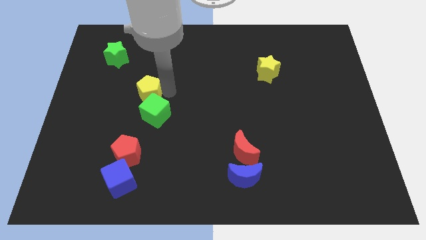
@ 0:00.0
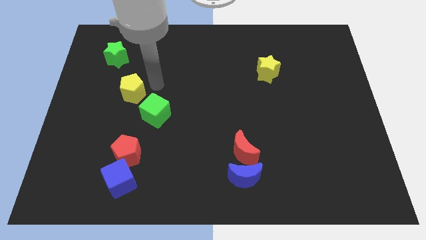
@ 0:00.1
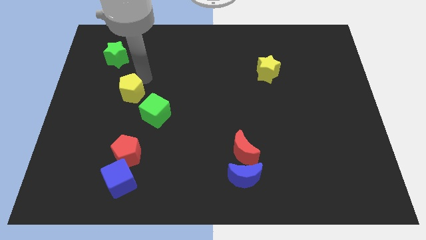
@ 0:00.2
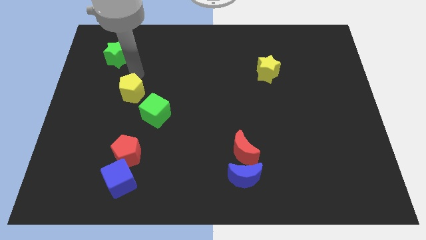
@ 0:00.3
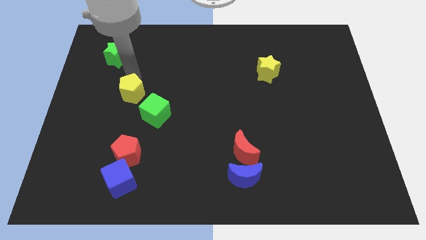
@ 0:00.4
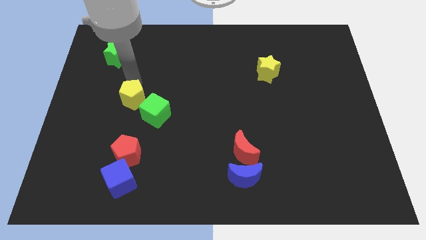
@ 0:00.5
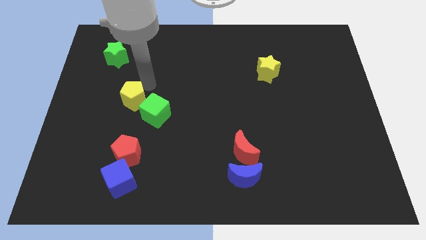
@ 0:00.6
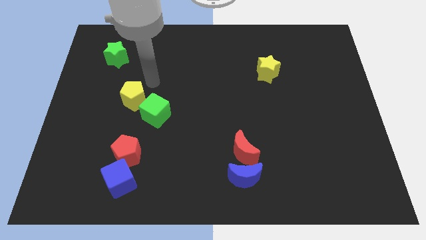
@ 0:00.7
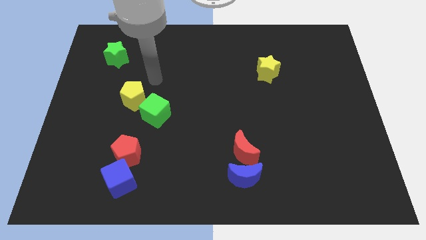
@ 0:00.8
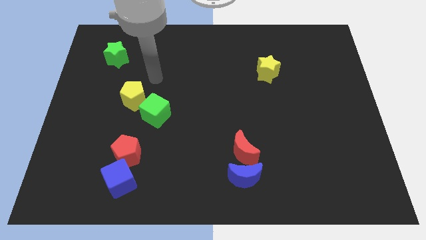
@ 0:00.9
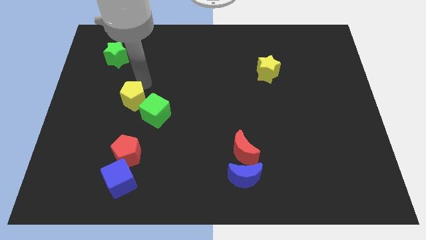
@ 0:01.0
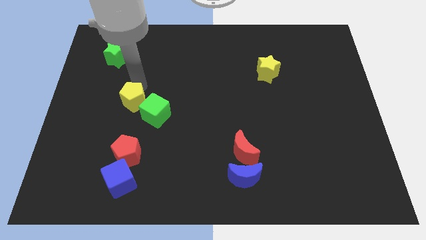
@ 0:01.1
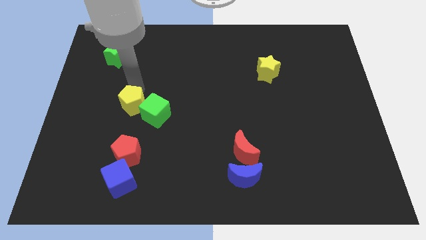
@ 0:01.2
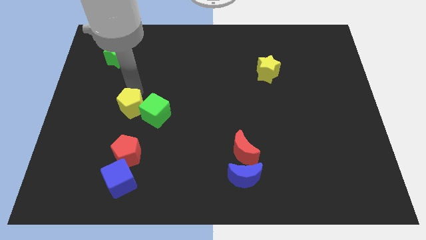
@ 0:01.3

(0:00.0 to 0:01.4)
move yellow pentagon beside green cube

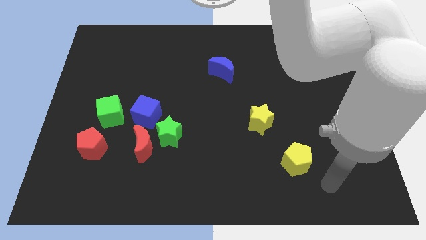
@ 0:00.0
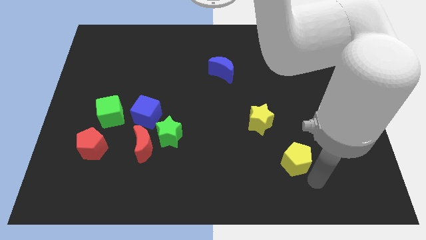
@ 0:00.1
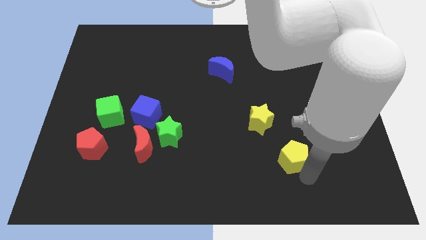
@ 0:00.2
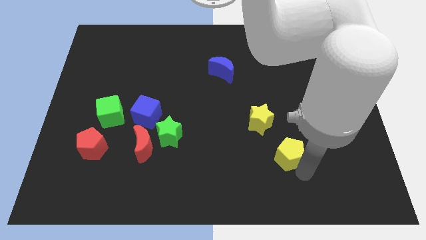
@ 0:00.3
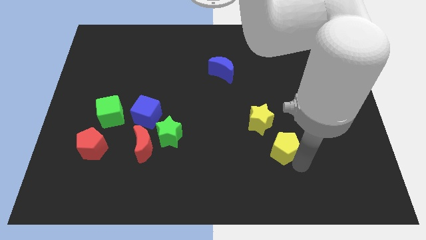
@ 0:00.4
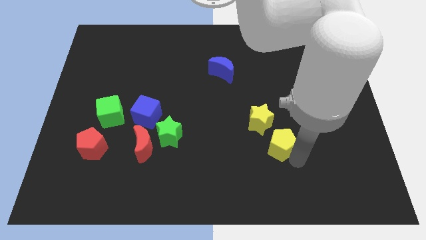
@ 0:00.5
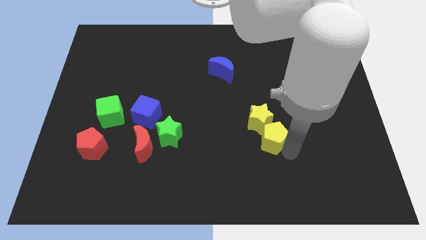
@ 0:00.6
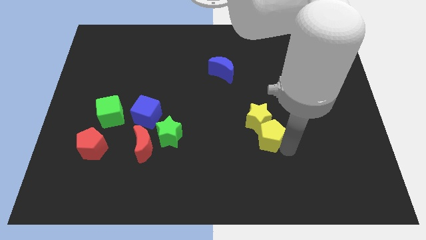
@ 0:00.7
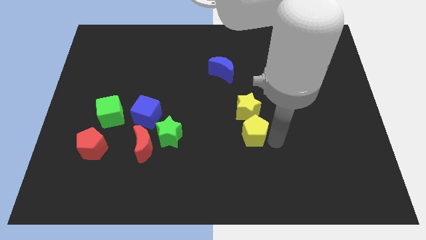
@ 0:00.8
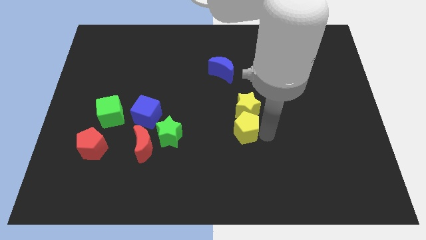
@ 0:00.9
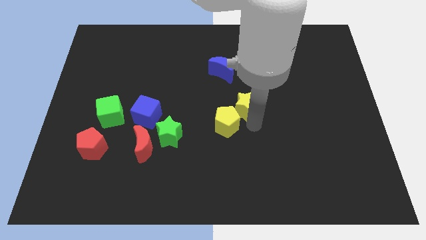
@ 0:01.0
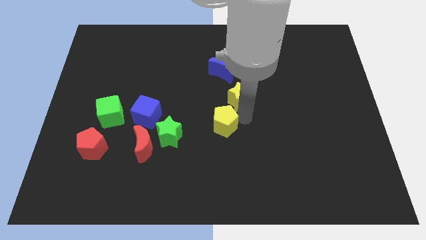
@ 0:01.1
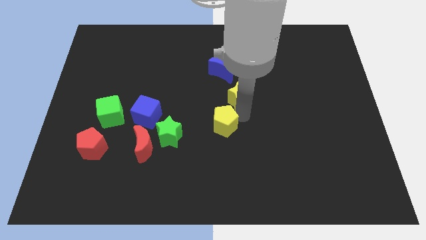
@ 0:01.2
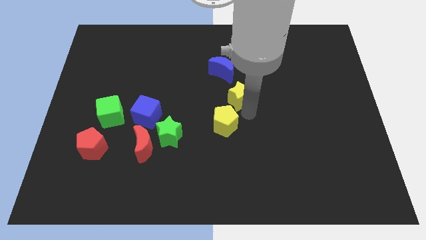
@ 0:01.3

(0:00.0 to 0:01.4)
push the yellow pentagon into yellow star

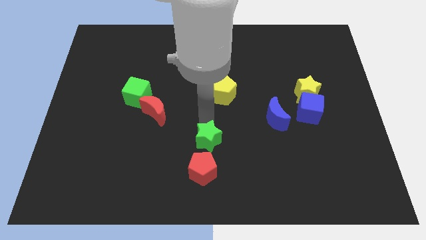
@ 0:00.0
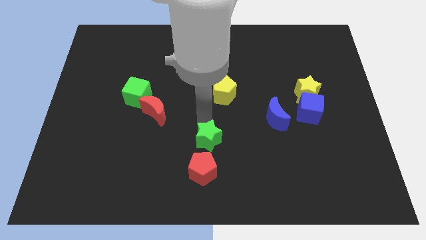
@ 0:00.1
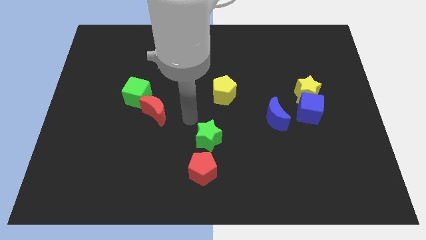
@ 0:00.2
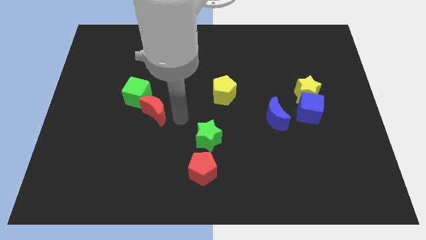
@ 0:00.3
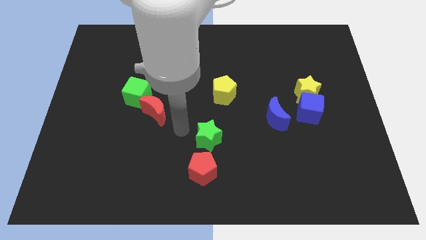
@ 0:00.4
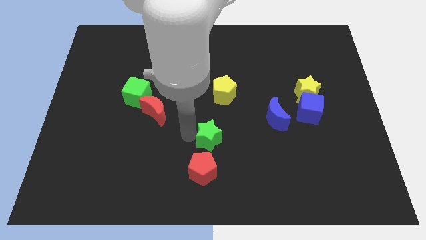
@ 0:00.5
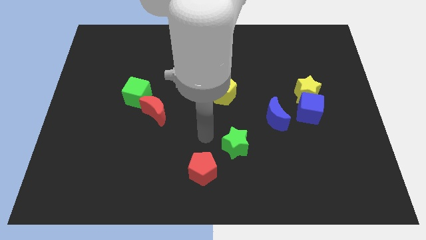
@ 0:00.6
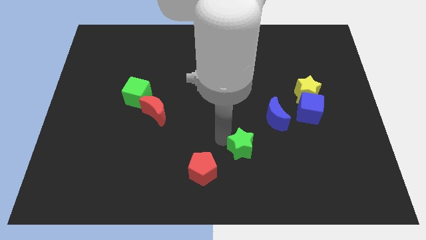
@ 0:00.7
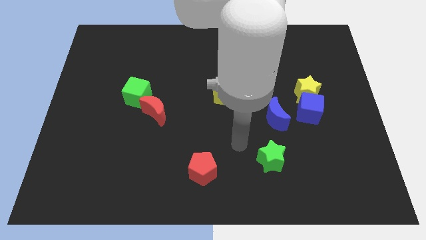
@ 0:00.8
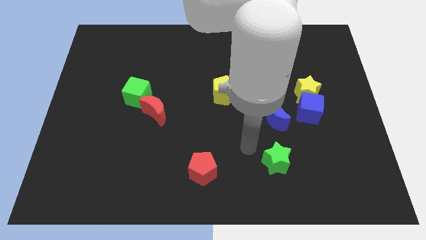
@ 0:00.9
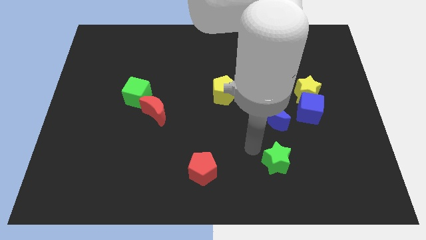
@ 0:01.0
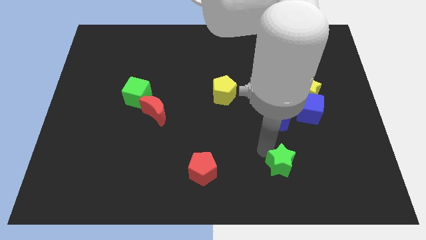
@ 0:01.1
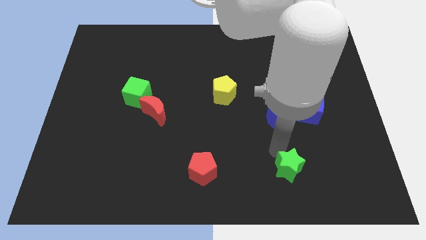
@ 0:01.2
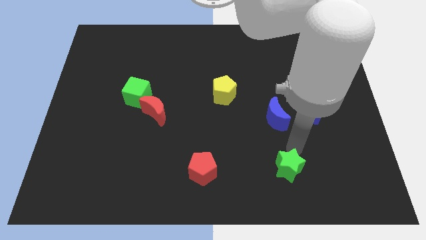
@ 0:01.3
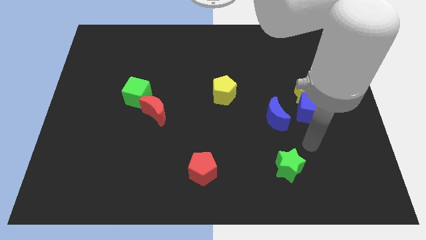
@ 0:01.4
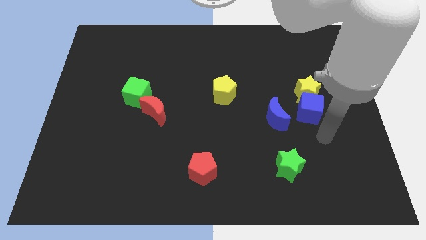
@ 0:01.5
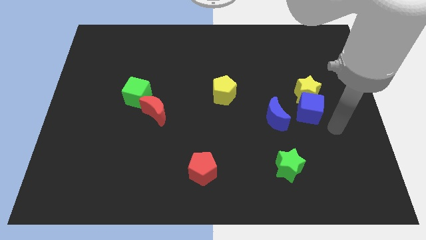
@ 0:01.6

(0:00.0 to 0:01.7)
place the green star parallel to the right side of the red pentagon

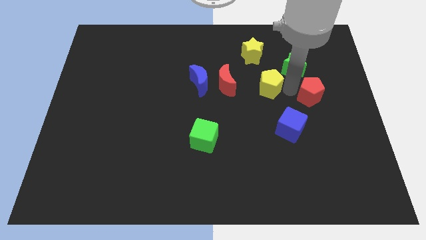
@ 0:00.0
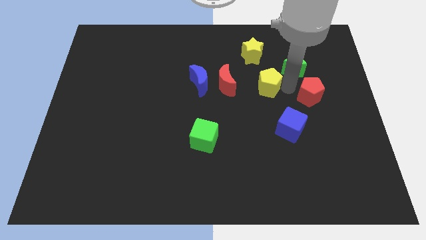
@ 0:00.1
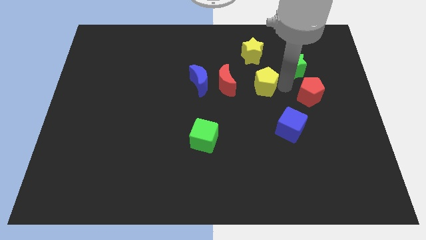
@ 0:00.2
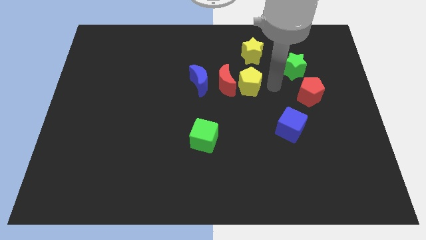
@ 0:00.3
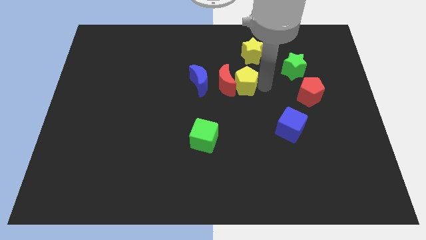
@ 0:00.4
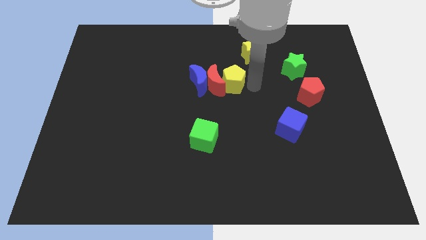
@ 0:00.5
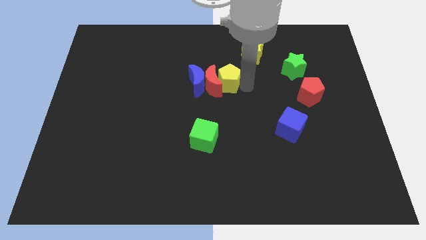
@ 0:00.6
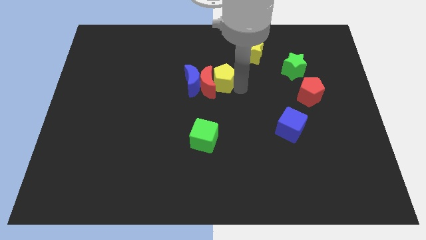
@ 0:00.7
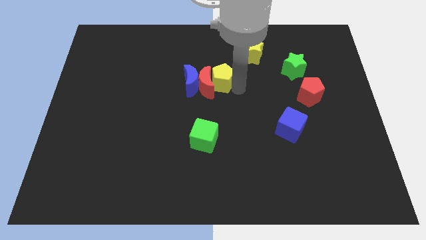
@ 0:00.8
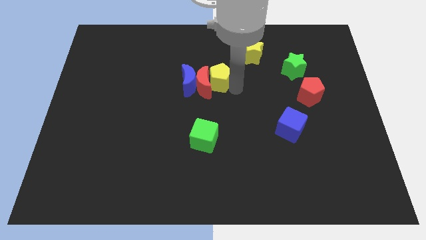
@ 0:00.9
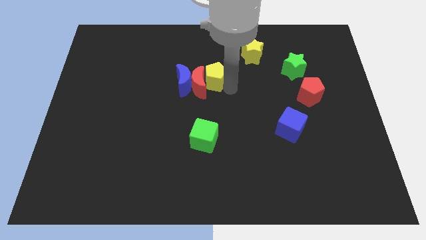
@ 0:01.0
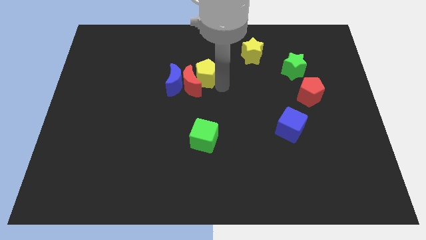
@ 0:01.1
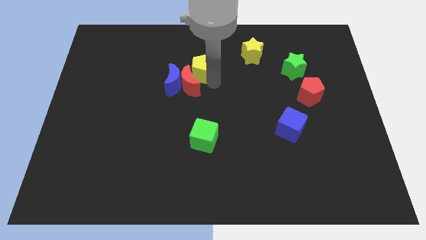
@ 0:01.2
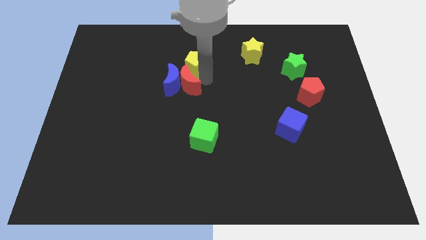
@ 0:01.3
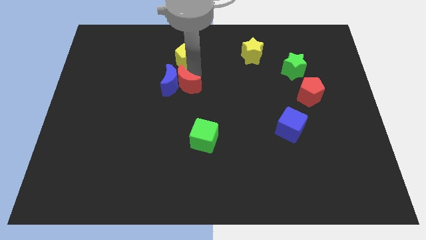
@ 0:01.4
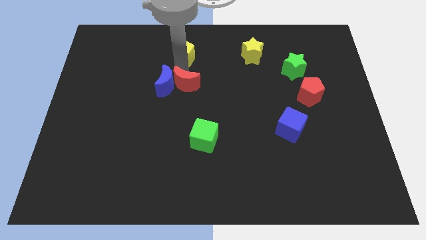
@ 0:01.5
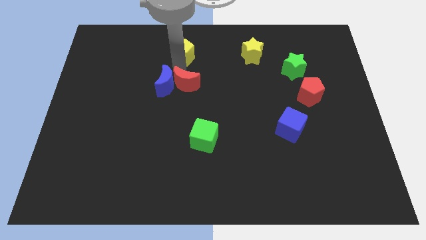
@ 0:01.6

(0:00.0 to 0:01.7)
place the yellow pentagon vertically above the red moon

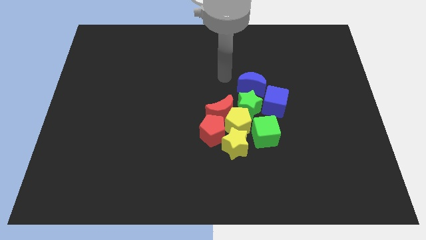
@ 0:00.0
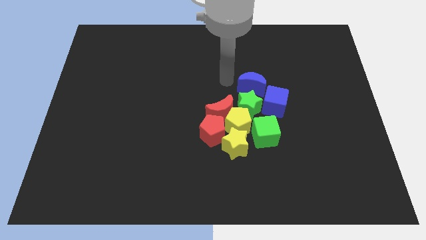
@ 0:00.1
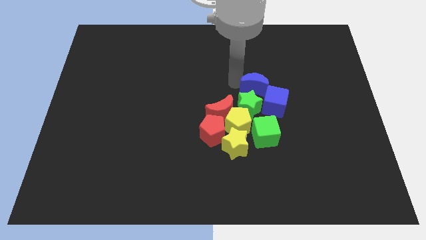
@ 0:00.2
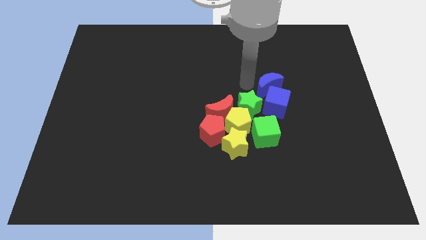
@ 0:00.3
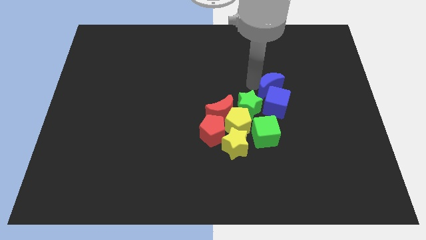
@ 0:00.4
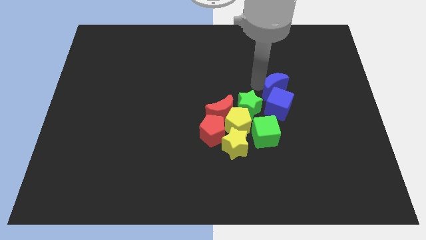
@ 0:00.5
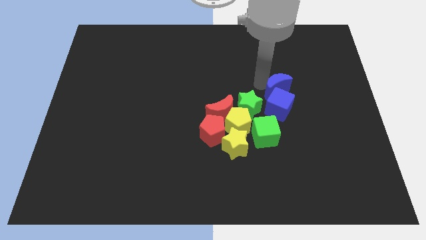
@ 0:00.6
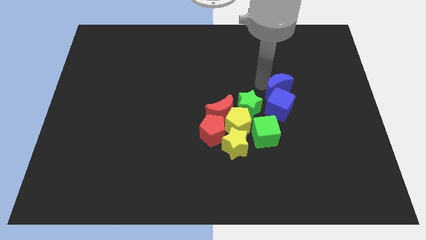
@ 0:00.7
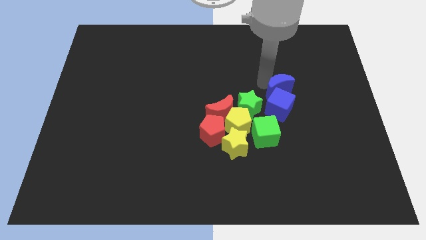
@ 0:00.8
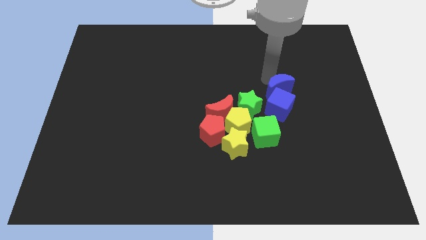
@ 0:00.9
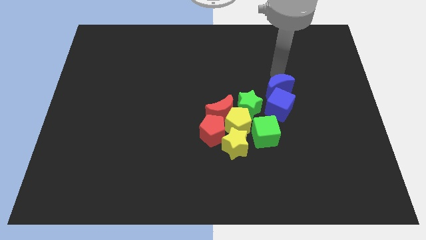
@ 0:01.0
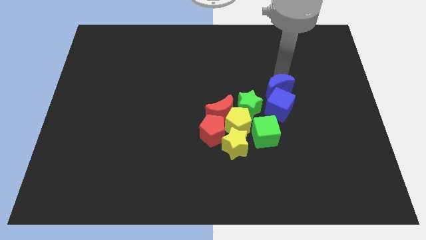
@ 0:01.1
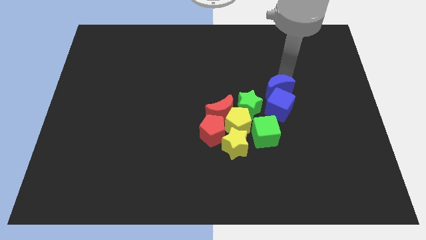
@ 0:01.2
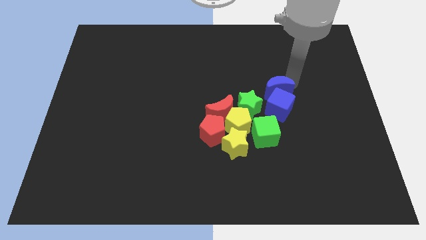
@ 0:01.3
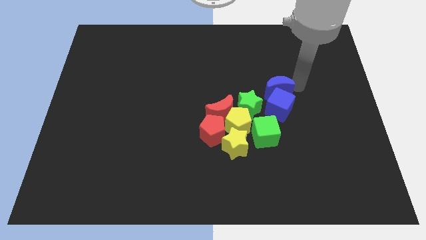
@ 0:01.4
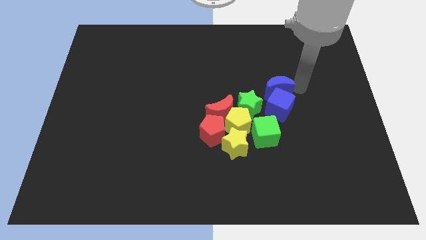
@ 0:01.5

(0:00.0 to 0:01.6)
push the blue moon into the blue cube

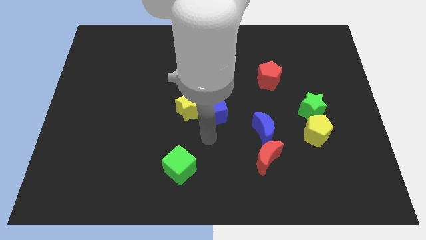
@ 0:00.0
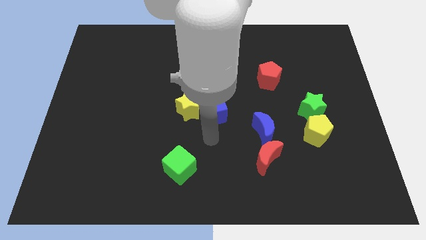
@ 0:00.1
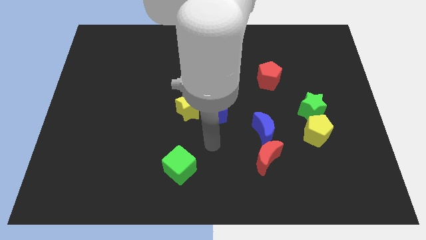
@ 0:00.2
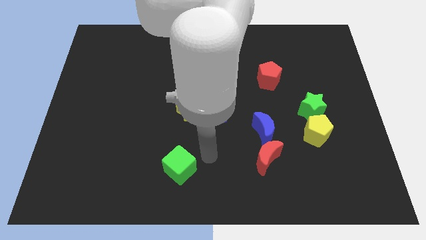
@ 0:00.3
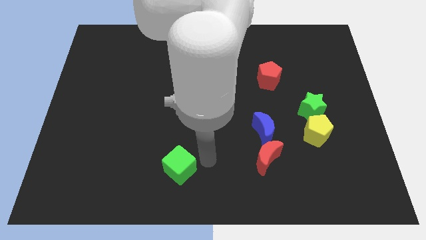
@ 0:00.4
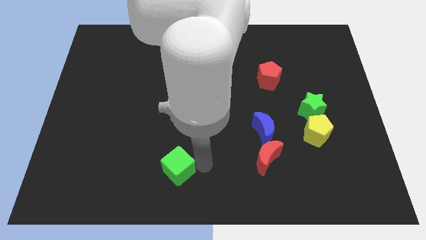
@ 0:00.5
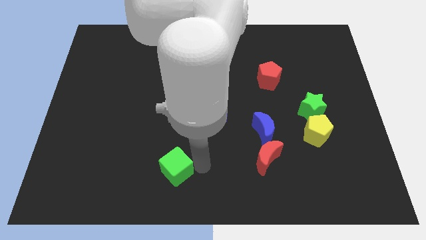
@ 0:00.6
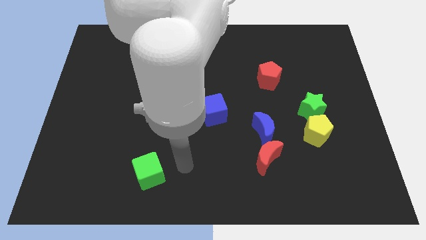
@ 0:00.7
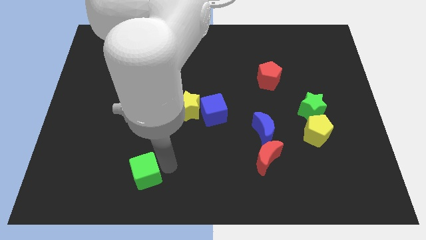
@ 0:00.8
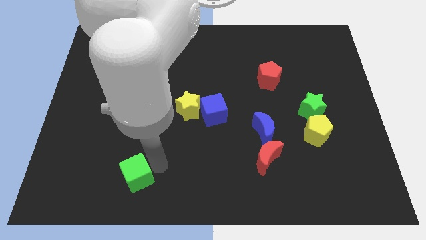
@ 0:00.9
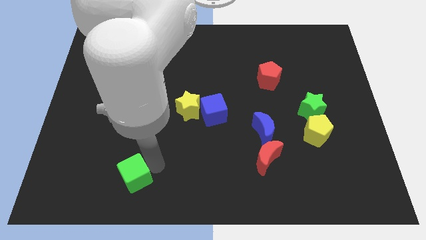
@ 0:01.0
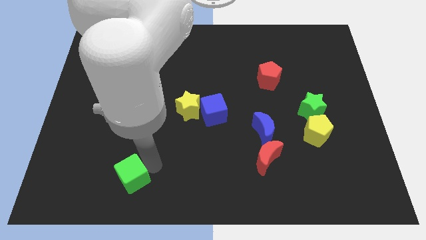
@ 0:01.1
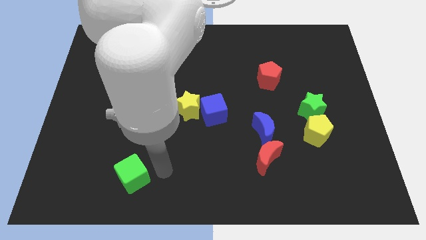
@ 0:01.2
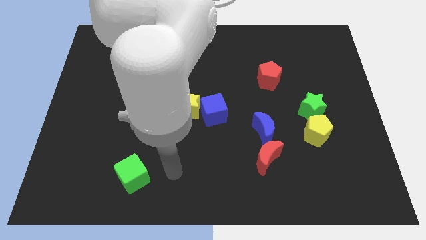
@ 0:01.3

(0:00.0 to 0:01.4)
push green cube towards the bottom left corner of the board
